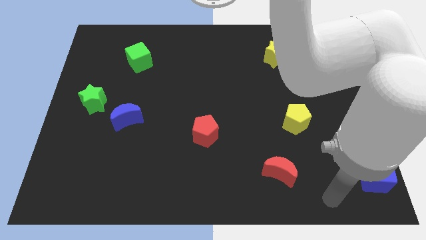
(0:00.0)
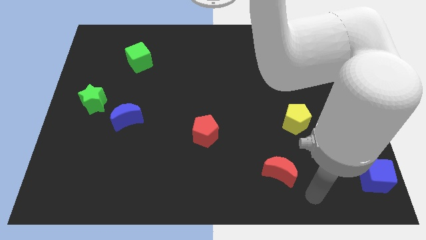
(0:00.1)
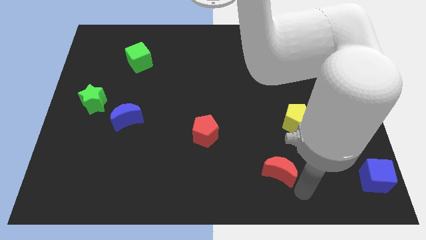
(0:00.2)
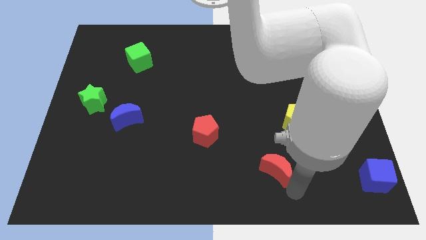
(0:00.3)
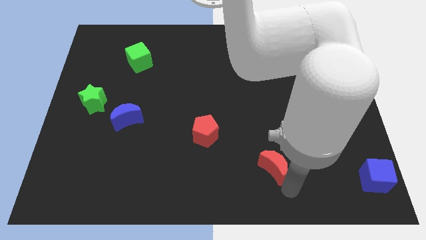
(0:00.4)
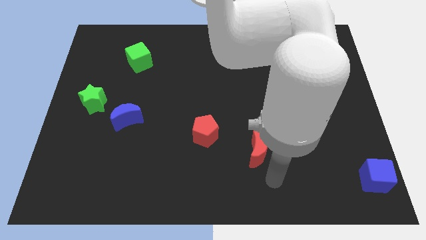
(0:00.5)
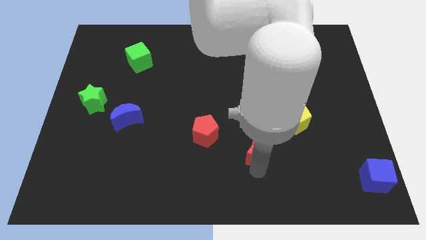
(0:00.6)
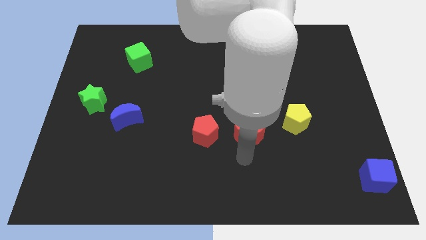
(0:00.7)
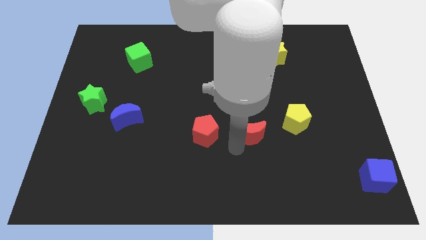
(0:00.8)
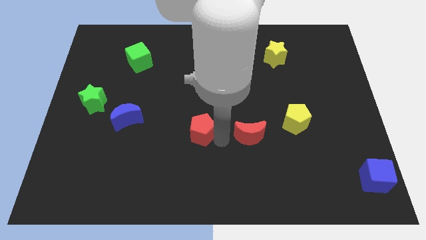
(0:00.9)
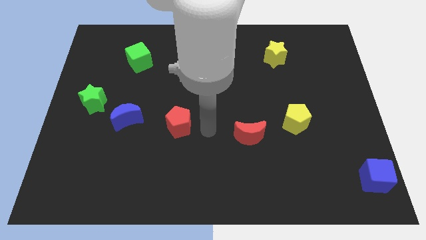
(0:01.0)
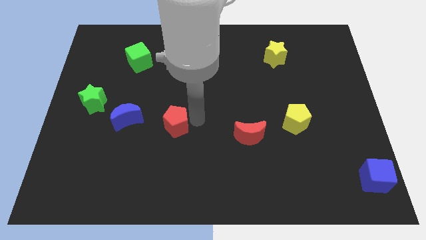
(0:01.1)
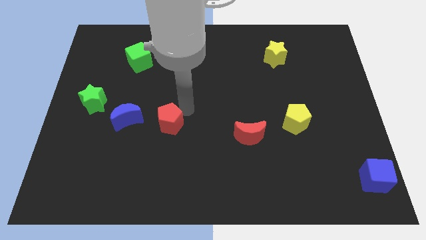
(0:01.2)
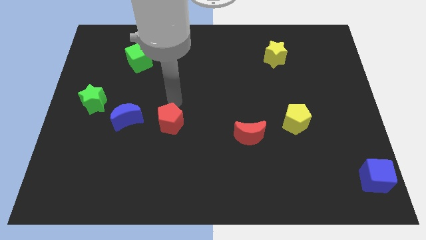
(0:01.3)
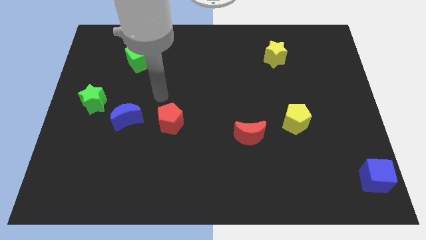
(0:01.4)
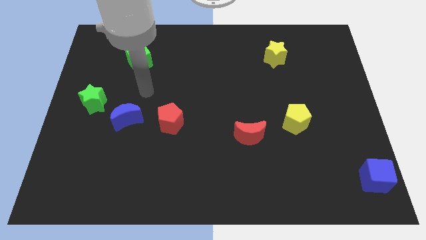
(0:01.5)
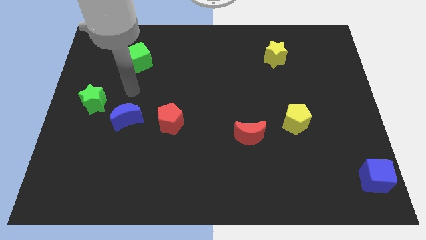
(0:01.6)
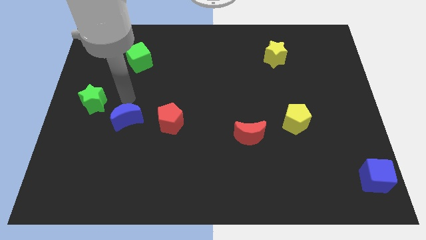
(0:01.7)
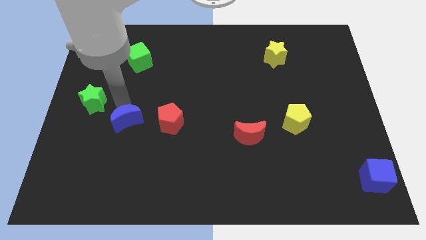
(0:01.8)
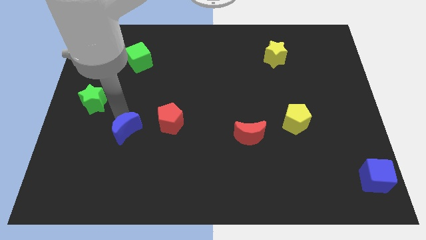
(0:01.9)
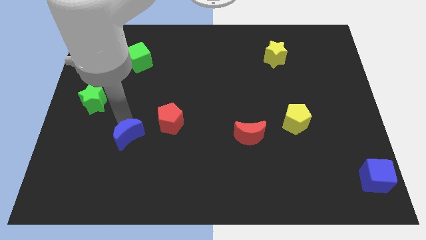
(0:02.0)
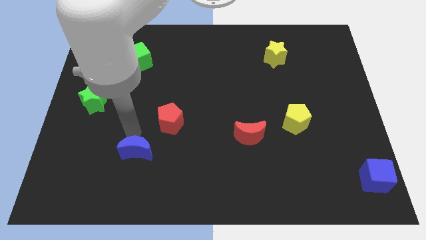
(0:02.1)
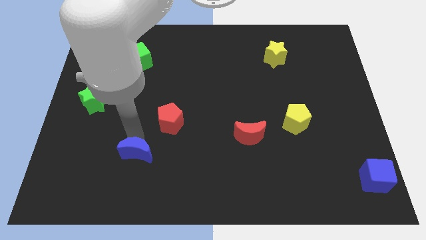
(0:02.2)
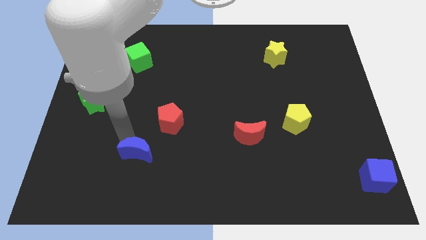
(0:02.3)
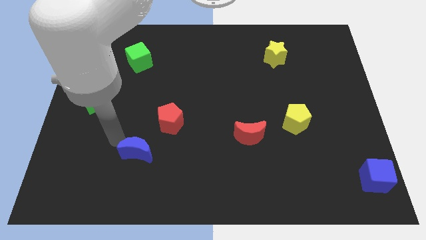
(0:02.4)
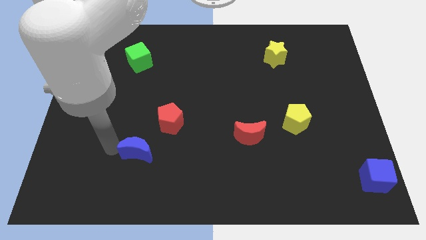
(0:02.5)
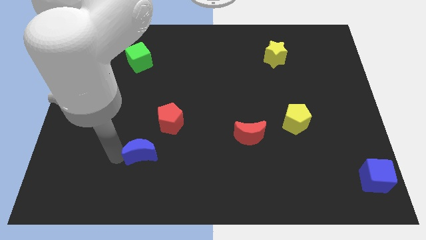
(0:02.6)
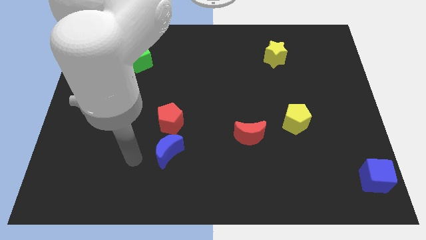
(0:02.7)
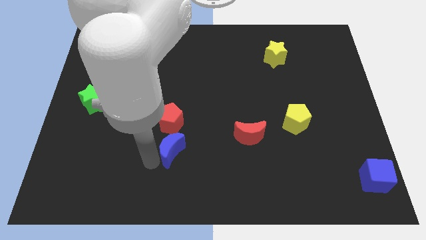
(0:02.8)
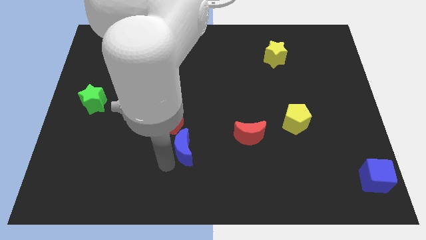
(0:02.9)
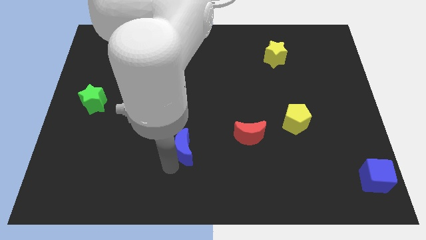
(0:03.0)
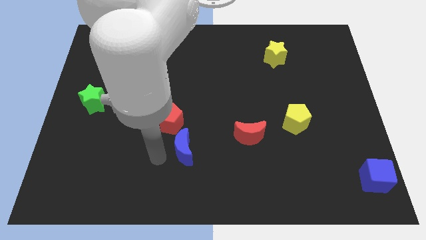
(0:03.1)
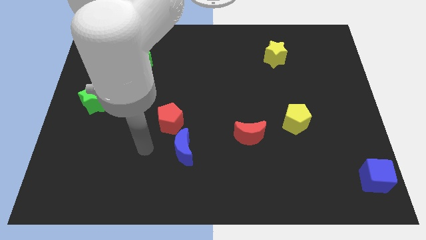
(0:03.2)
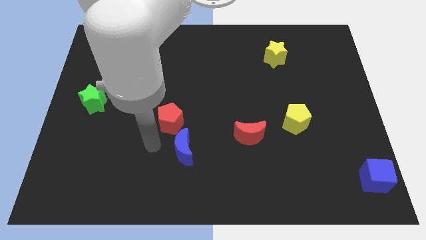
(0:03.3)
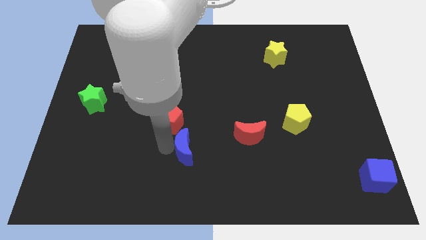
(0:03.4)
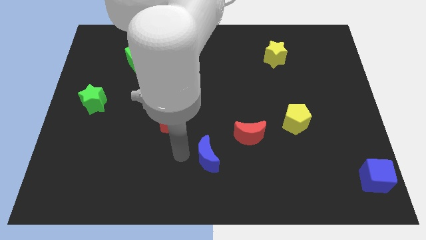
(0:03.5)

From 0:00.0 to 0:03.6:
push the blue moon towards the red moon

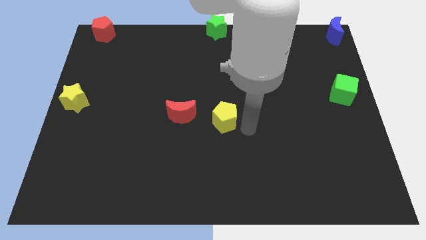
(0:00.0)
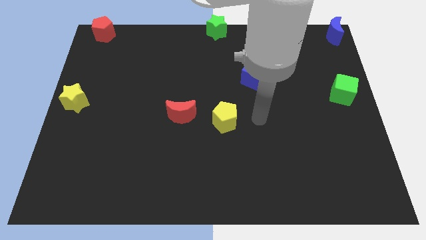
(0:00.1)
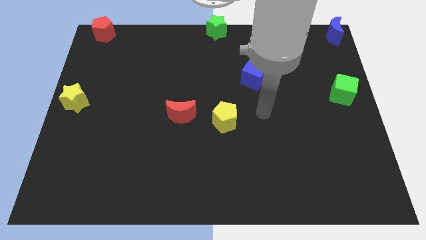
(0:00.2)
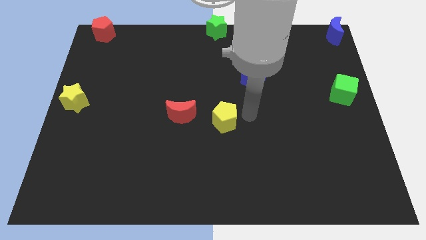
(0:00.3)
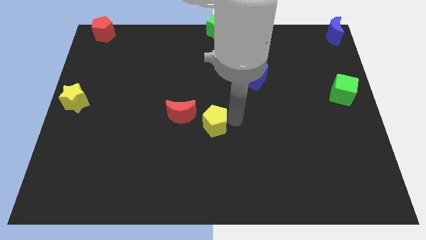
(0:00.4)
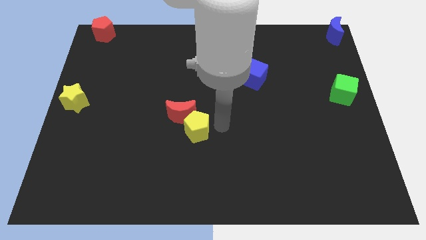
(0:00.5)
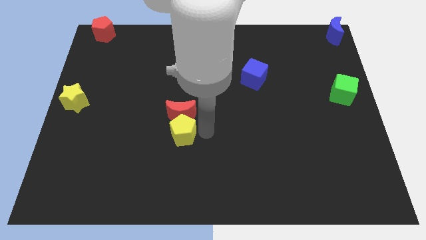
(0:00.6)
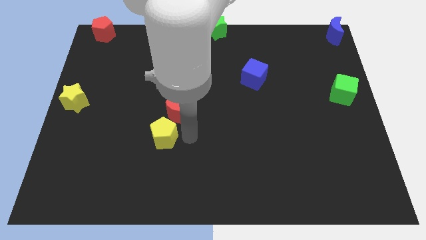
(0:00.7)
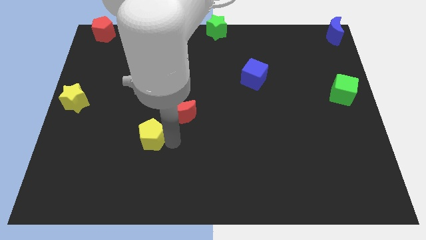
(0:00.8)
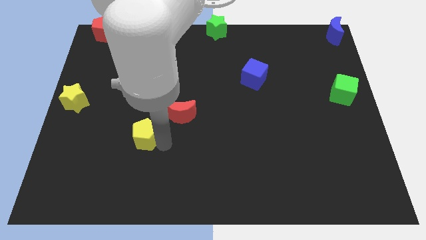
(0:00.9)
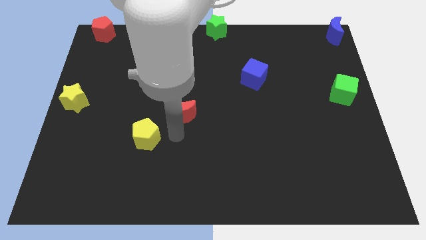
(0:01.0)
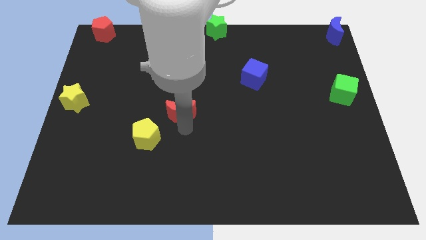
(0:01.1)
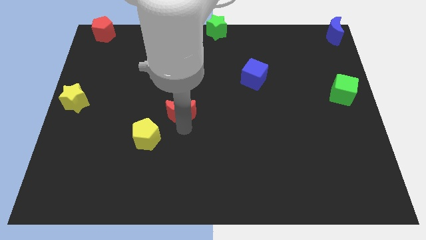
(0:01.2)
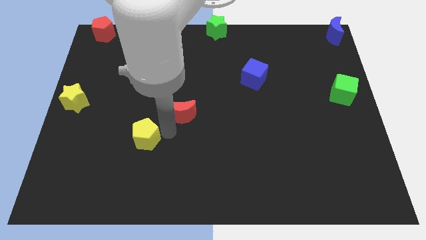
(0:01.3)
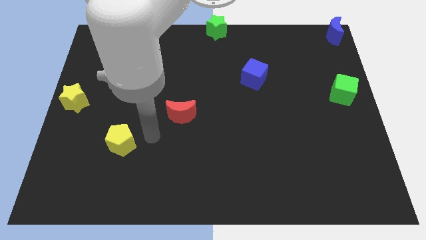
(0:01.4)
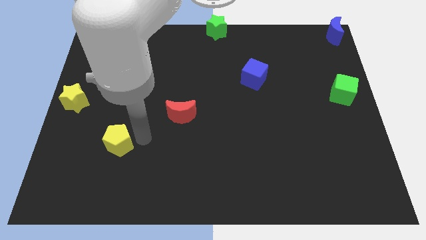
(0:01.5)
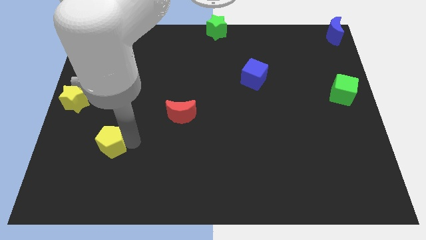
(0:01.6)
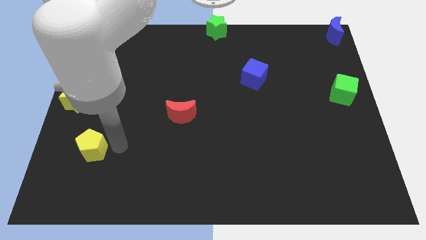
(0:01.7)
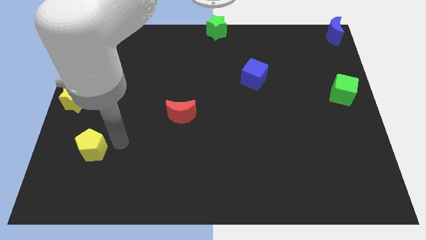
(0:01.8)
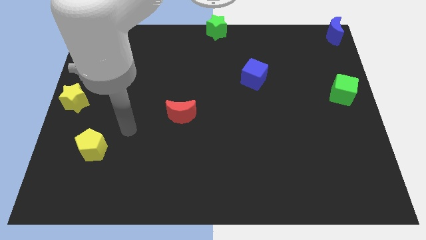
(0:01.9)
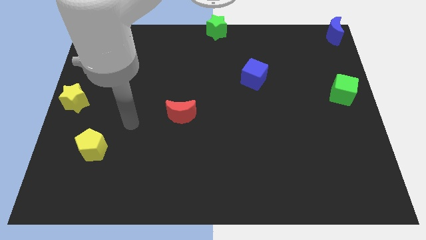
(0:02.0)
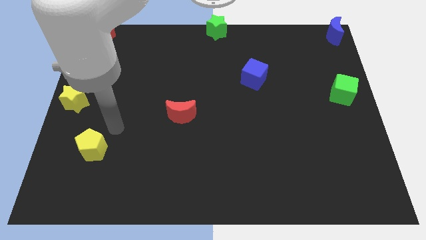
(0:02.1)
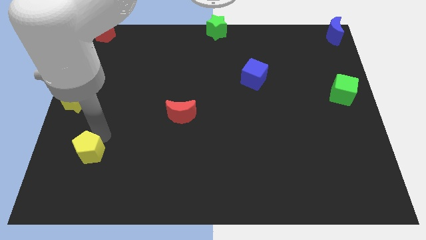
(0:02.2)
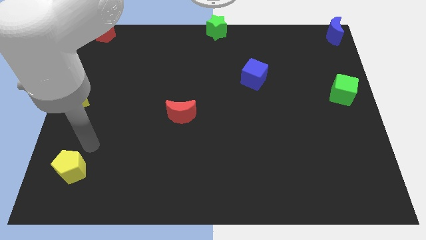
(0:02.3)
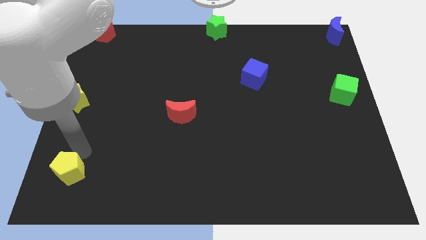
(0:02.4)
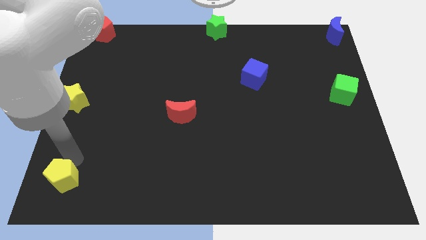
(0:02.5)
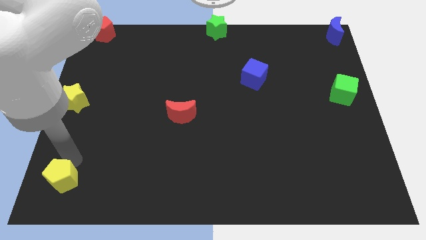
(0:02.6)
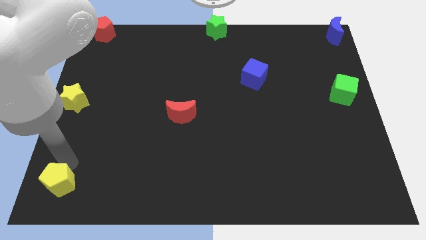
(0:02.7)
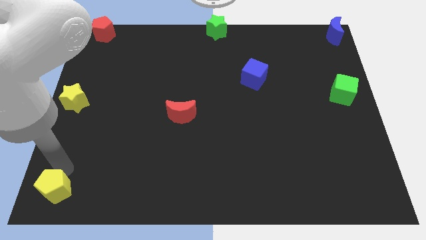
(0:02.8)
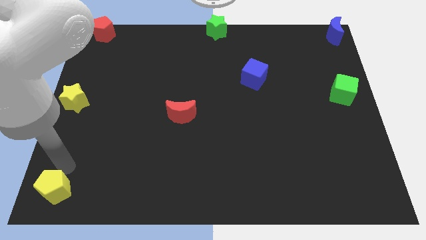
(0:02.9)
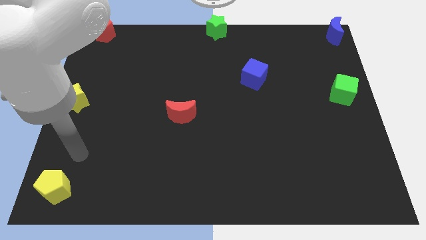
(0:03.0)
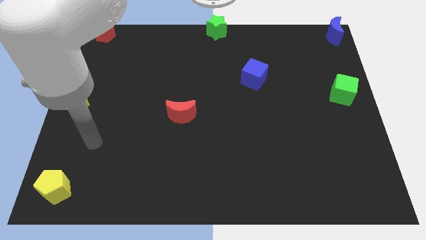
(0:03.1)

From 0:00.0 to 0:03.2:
put the yellow pentagon at the bottom left corner of the board

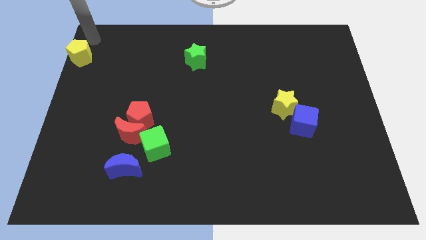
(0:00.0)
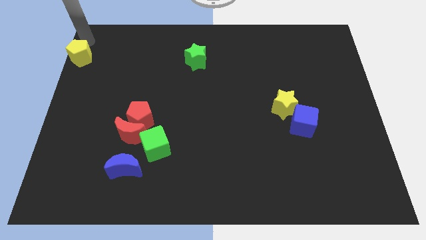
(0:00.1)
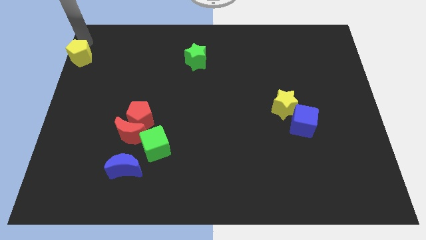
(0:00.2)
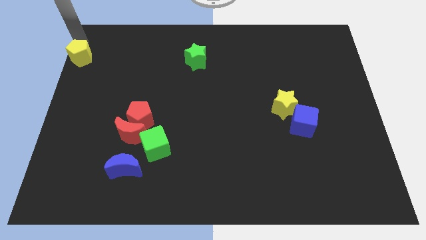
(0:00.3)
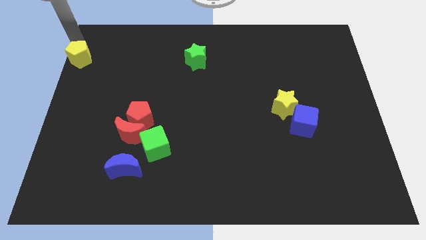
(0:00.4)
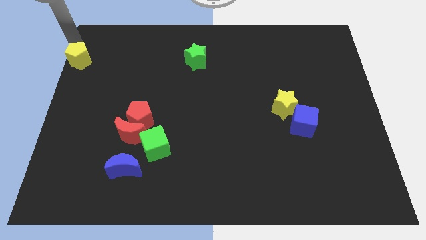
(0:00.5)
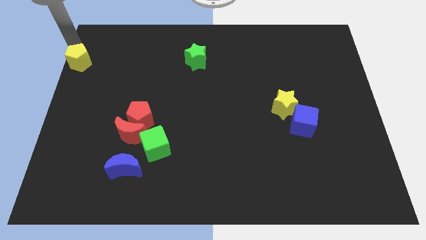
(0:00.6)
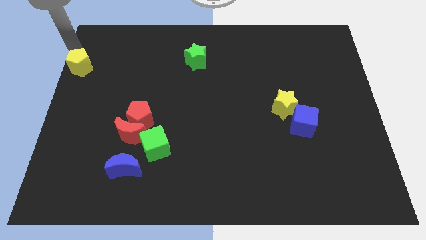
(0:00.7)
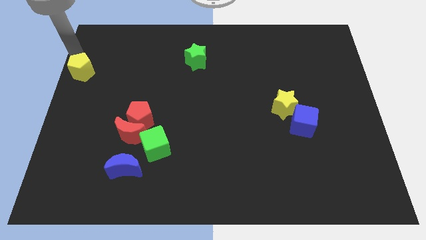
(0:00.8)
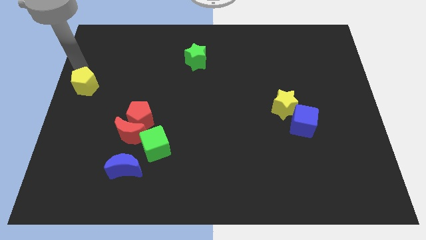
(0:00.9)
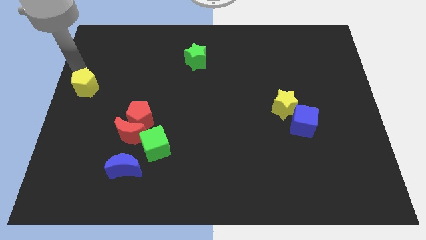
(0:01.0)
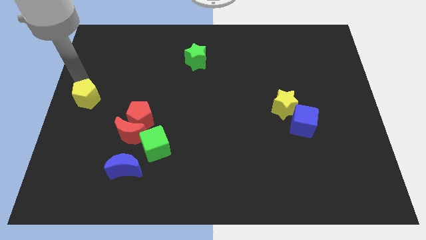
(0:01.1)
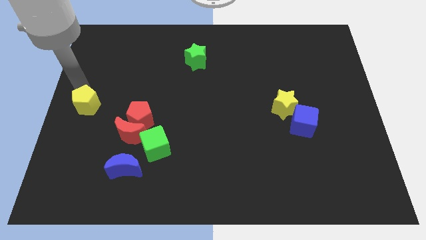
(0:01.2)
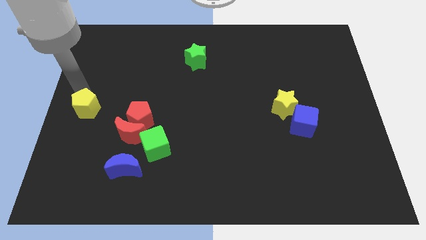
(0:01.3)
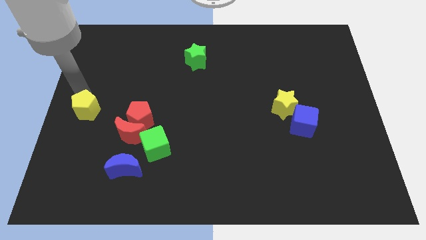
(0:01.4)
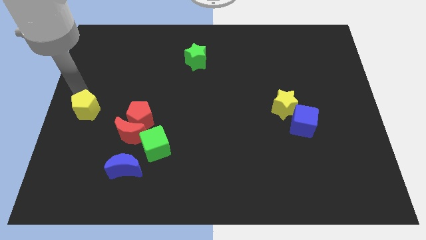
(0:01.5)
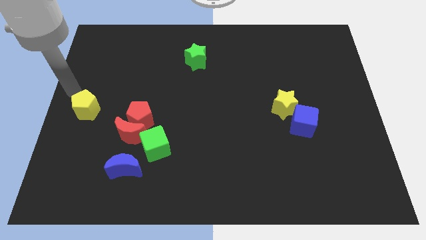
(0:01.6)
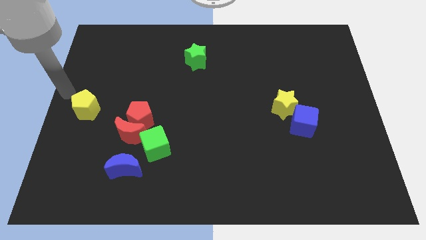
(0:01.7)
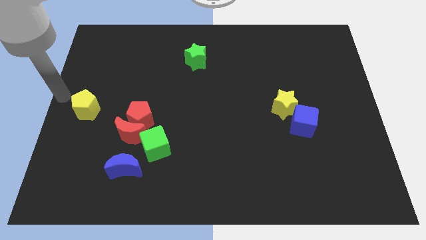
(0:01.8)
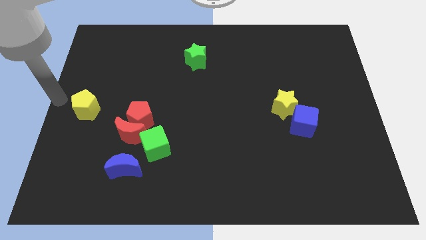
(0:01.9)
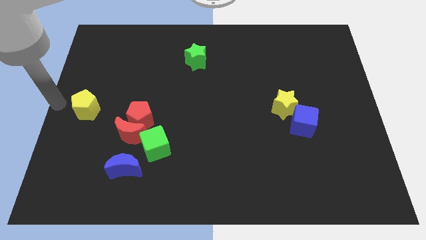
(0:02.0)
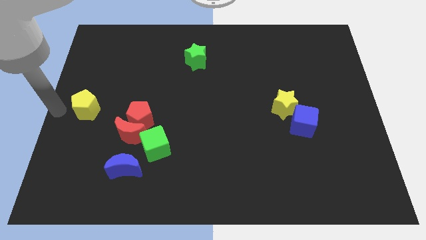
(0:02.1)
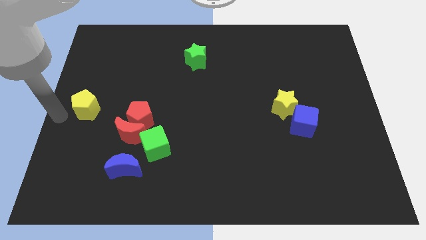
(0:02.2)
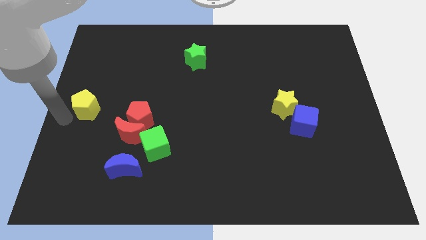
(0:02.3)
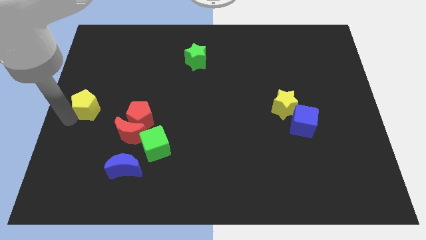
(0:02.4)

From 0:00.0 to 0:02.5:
place the yellow pentagon to the left of the red pentagon
